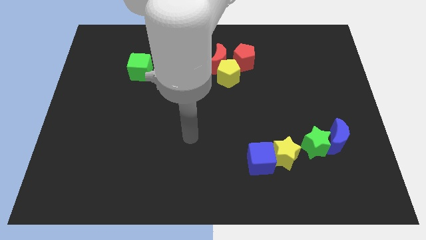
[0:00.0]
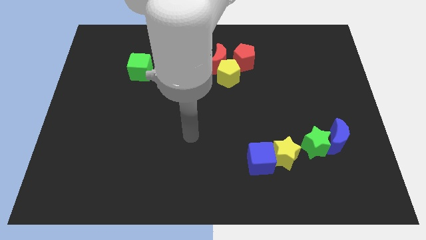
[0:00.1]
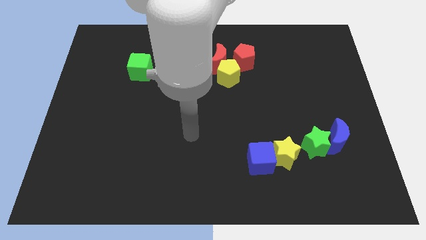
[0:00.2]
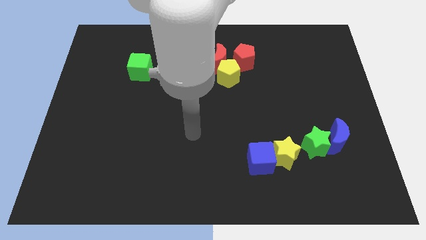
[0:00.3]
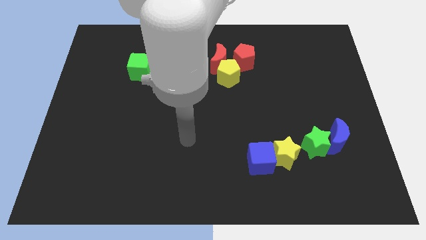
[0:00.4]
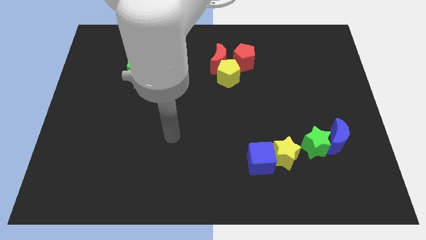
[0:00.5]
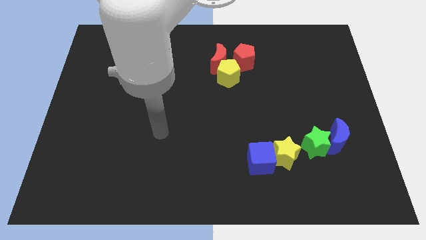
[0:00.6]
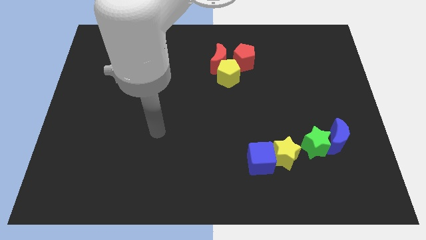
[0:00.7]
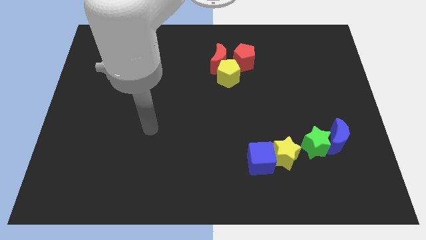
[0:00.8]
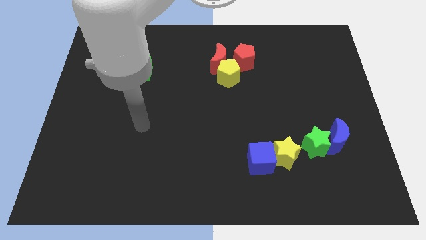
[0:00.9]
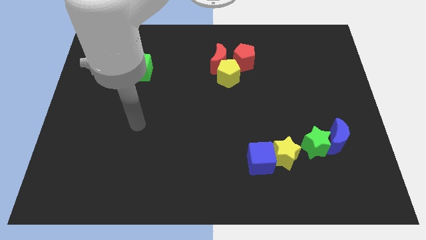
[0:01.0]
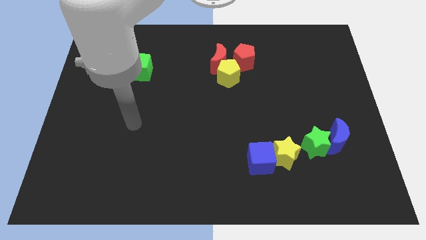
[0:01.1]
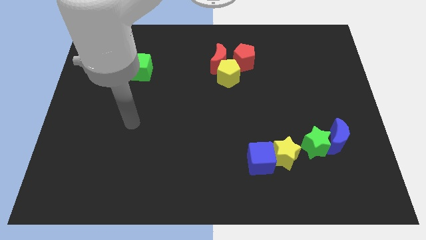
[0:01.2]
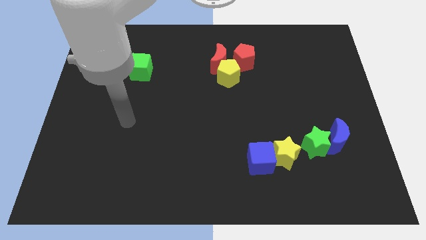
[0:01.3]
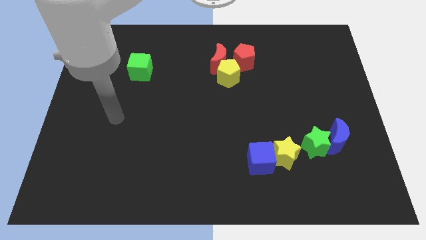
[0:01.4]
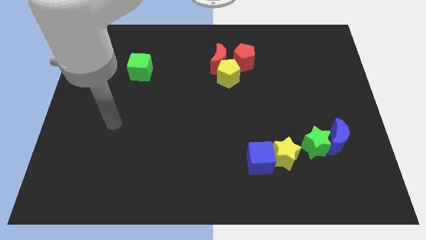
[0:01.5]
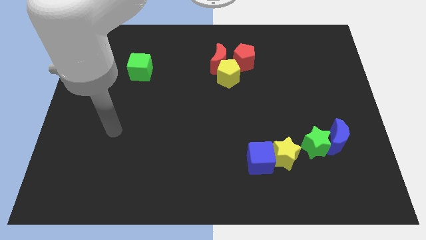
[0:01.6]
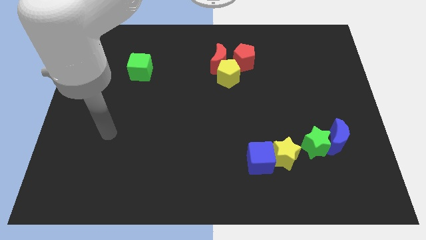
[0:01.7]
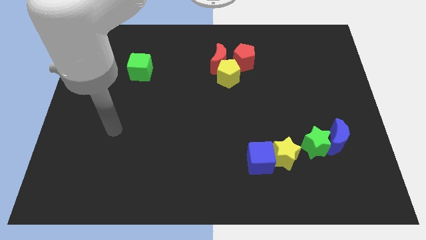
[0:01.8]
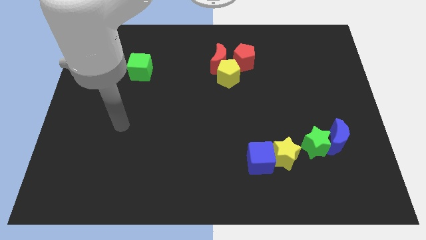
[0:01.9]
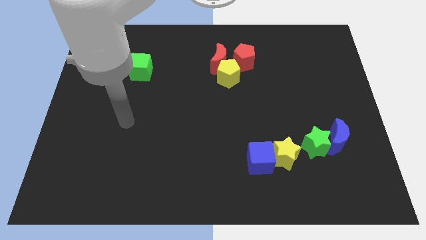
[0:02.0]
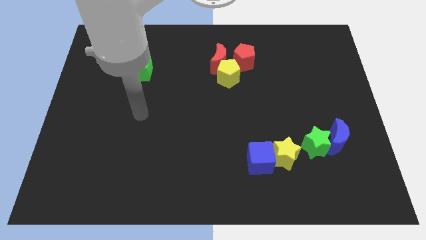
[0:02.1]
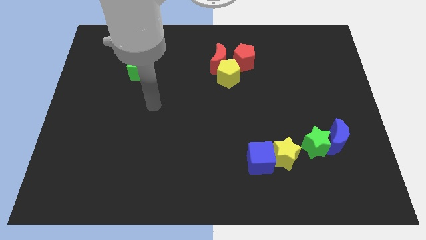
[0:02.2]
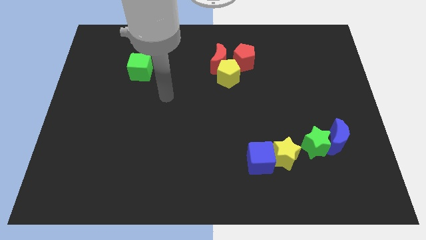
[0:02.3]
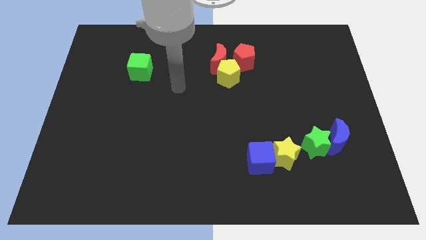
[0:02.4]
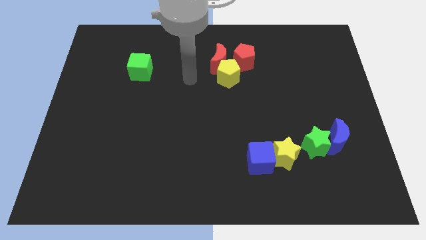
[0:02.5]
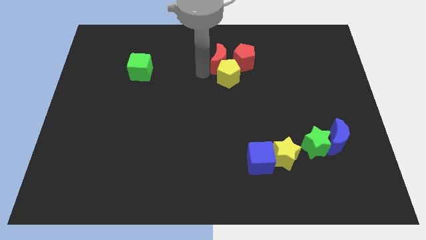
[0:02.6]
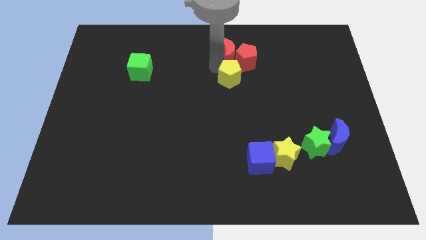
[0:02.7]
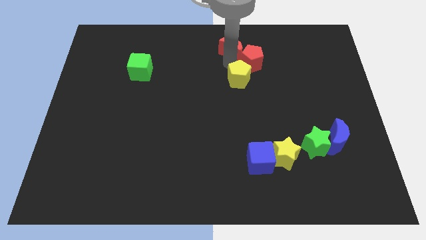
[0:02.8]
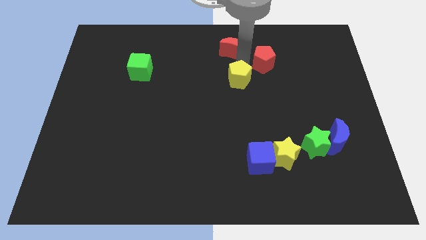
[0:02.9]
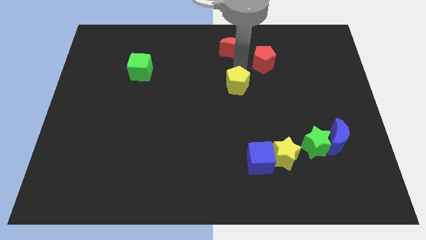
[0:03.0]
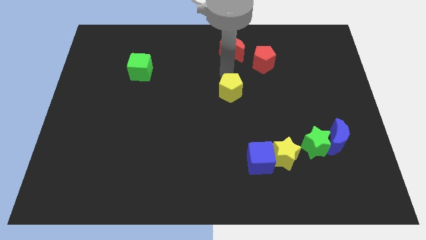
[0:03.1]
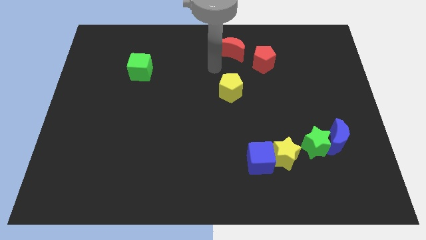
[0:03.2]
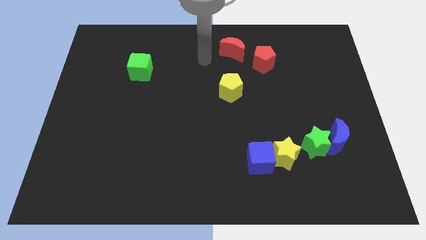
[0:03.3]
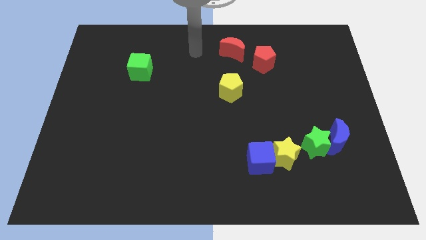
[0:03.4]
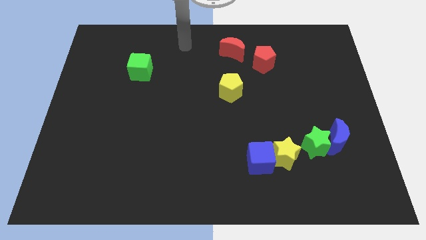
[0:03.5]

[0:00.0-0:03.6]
separate the red blocks from the yellow pentagon

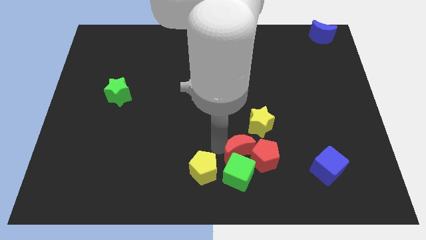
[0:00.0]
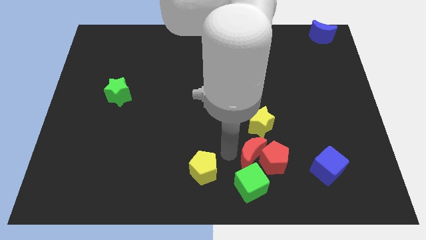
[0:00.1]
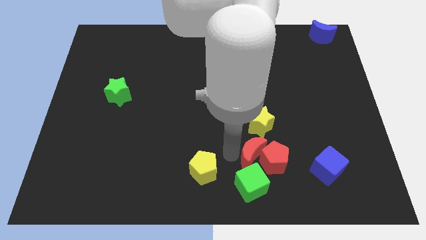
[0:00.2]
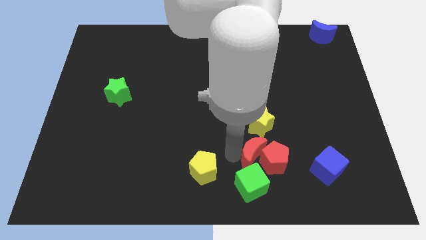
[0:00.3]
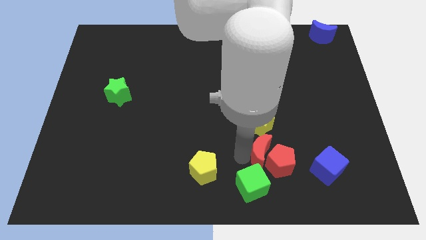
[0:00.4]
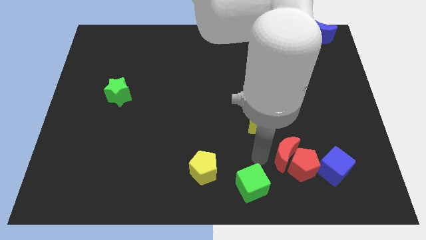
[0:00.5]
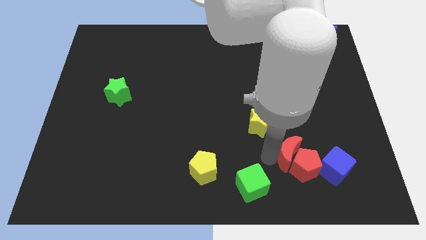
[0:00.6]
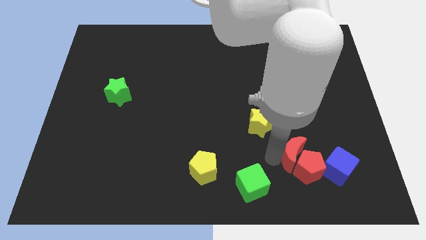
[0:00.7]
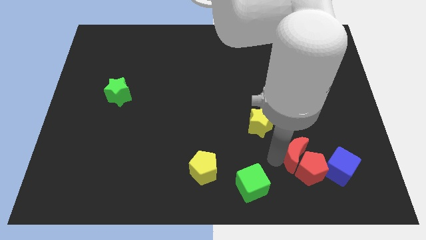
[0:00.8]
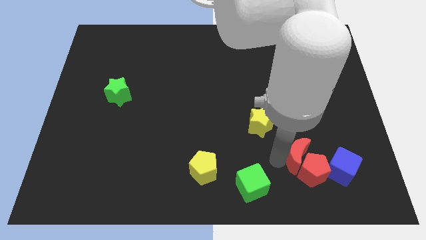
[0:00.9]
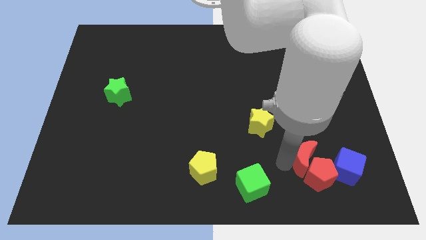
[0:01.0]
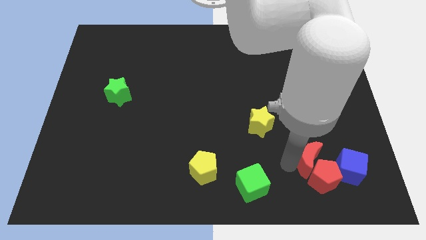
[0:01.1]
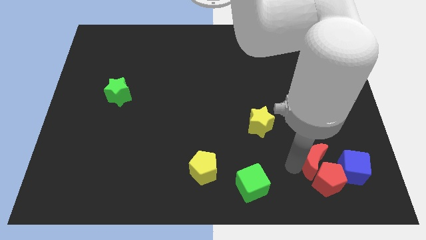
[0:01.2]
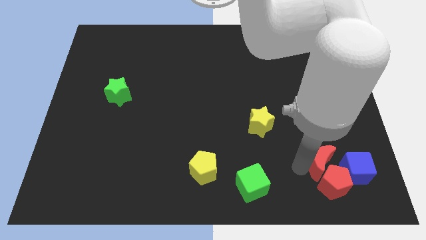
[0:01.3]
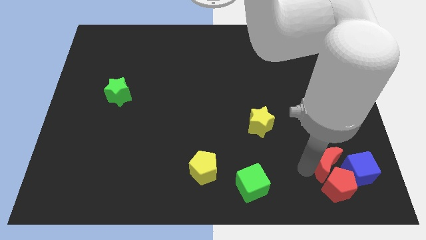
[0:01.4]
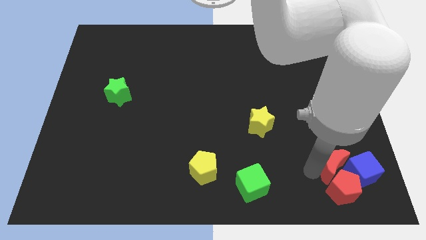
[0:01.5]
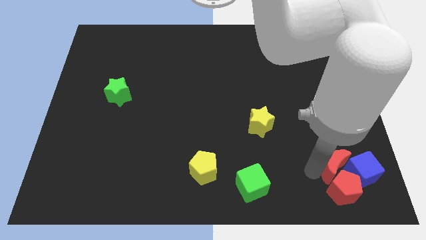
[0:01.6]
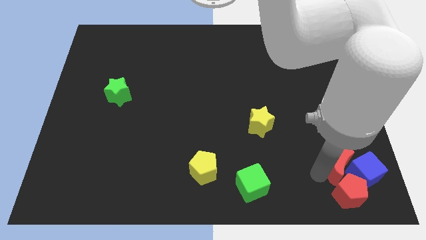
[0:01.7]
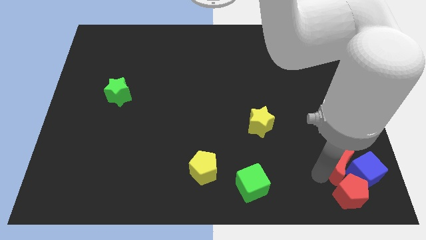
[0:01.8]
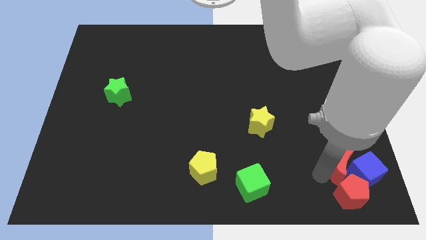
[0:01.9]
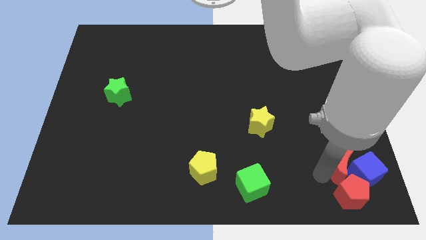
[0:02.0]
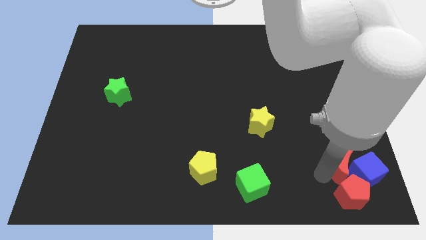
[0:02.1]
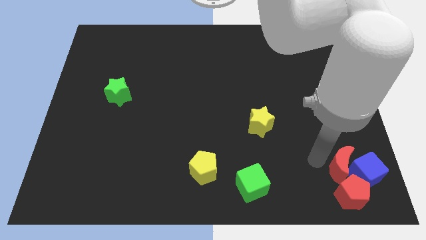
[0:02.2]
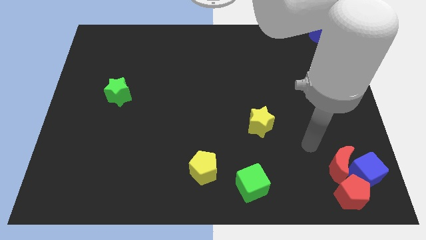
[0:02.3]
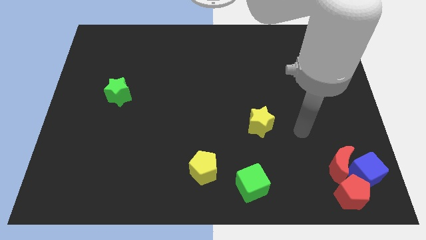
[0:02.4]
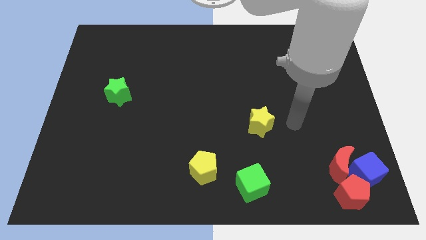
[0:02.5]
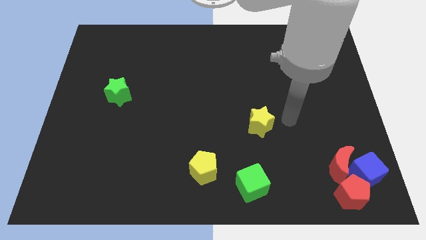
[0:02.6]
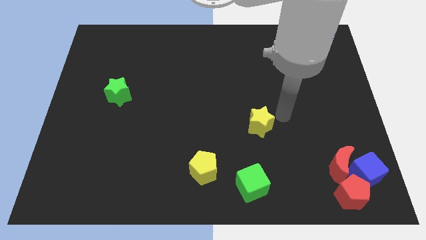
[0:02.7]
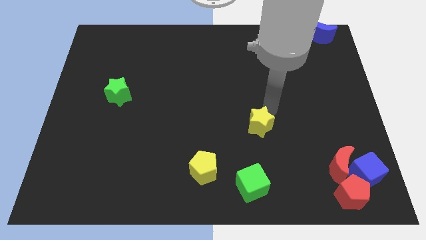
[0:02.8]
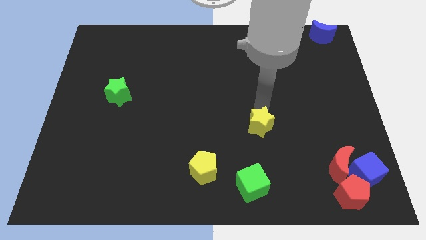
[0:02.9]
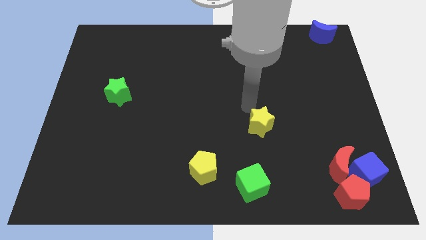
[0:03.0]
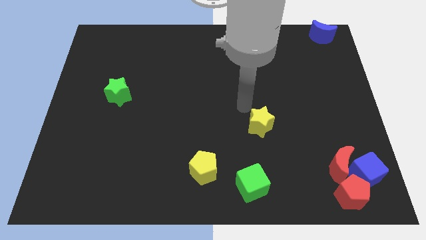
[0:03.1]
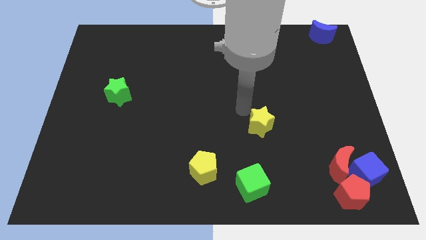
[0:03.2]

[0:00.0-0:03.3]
place both the red blocks and blue block to the bottom right side of the board

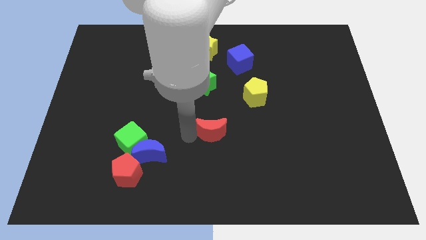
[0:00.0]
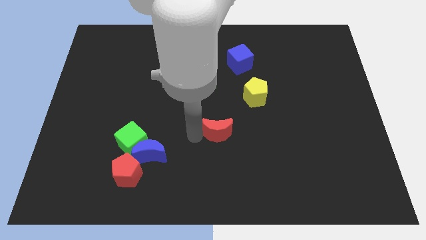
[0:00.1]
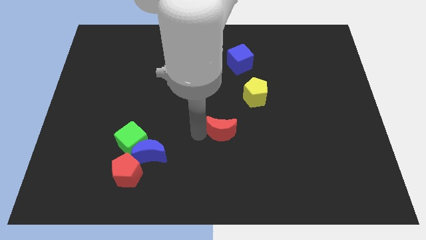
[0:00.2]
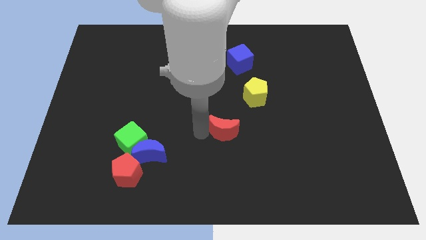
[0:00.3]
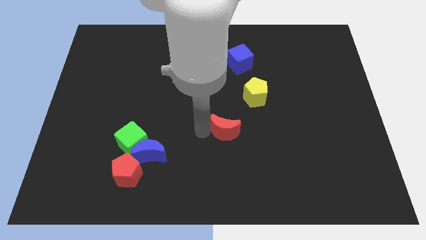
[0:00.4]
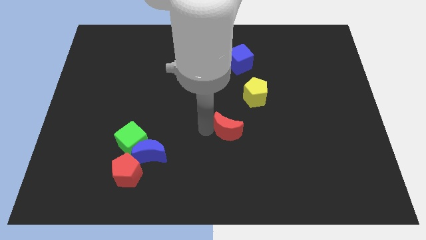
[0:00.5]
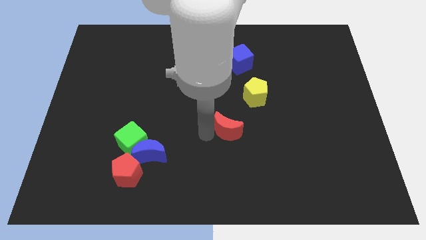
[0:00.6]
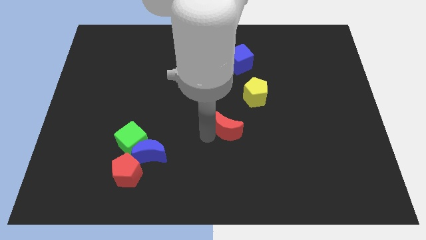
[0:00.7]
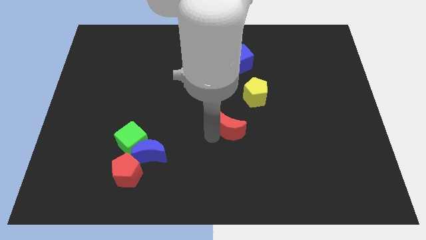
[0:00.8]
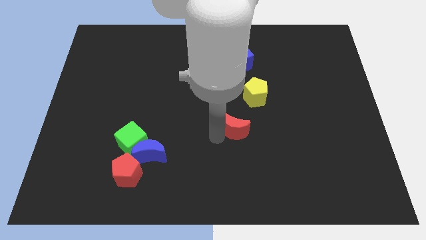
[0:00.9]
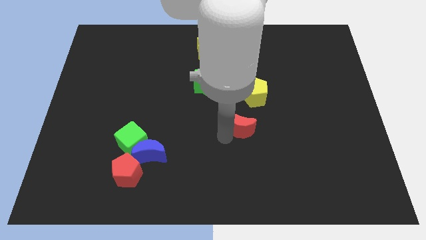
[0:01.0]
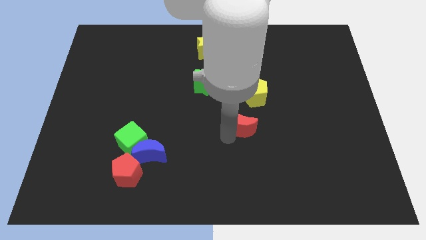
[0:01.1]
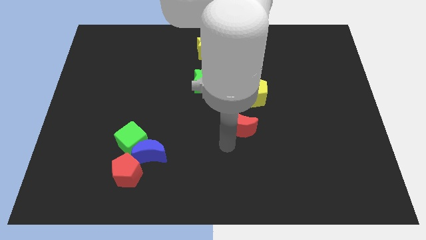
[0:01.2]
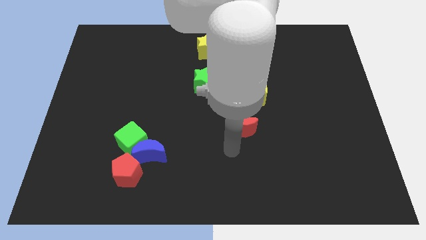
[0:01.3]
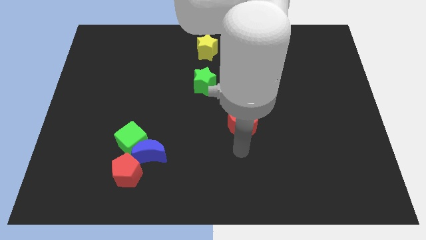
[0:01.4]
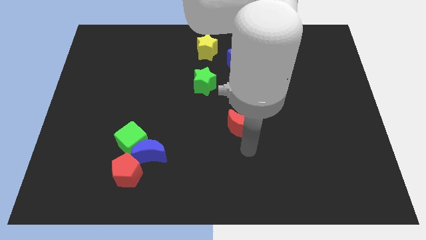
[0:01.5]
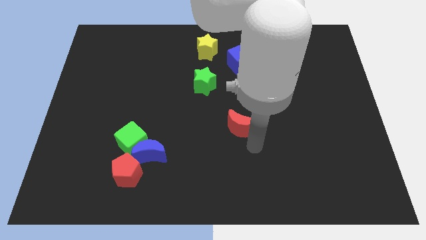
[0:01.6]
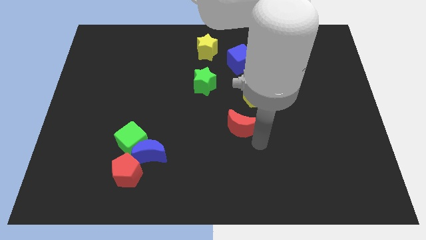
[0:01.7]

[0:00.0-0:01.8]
push the red moon towards the yellow pentagon

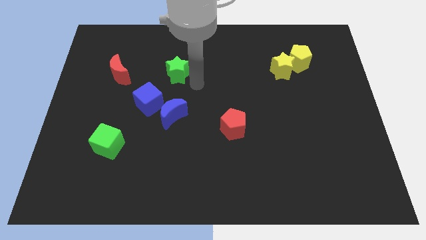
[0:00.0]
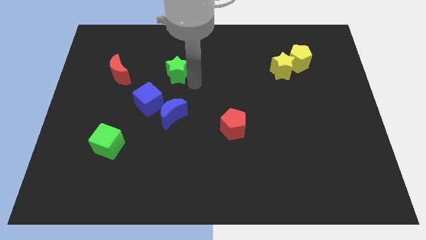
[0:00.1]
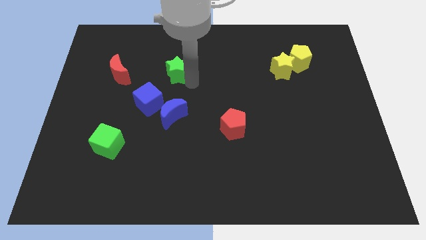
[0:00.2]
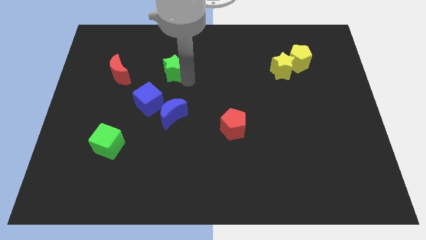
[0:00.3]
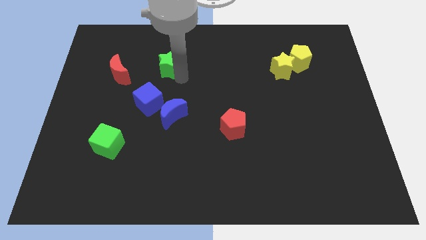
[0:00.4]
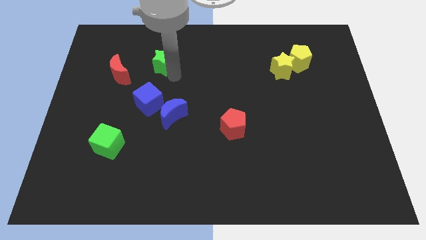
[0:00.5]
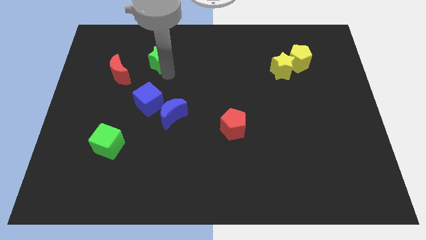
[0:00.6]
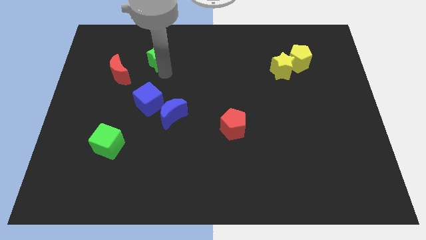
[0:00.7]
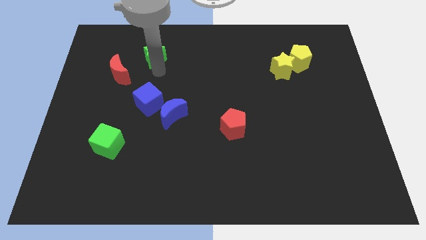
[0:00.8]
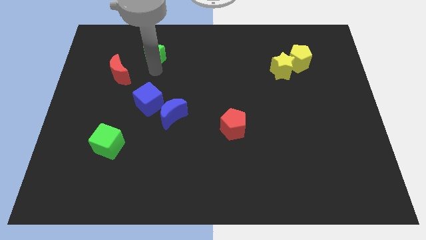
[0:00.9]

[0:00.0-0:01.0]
place green star above blue cube
